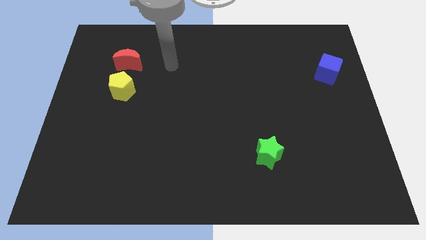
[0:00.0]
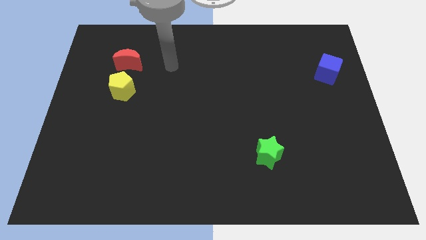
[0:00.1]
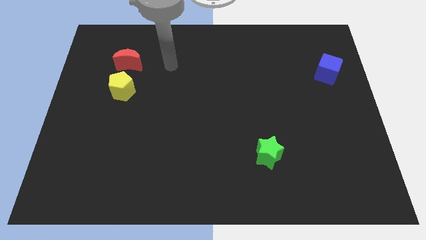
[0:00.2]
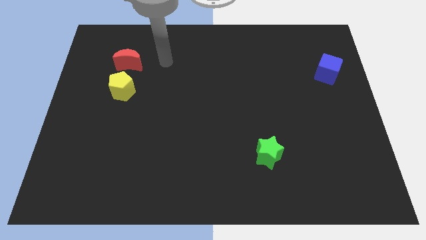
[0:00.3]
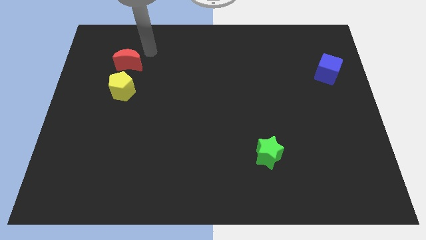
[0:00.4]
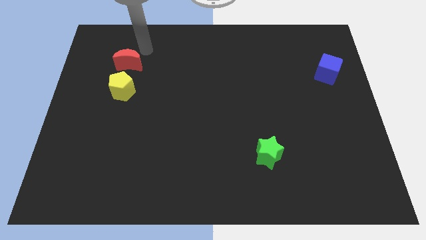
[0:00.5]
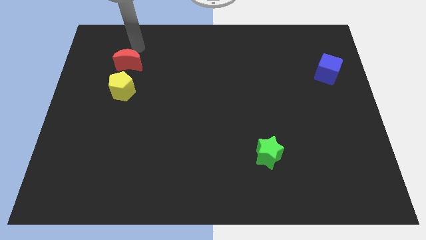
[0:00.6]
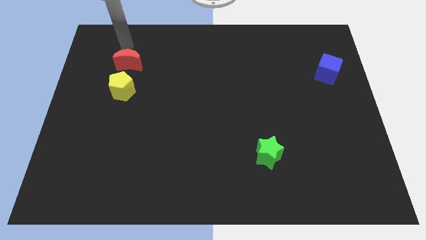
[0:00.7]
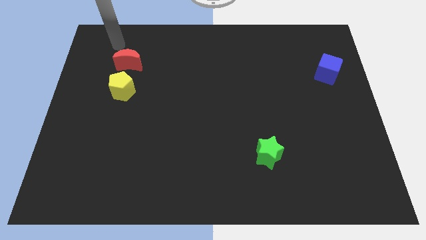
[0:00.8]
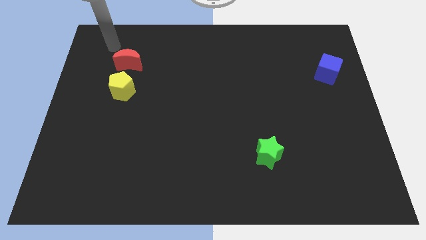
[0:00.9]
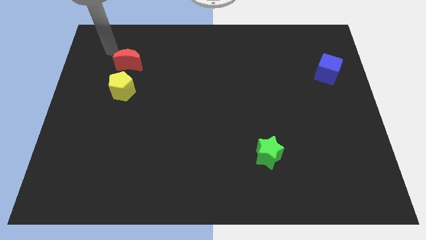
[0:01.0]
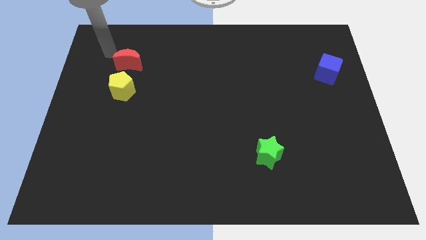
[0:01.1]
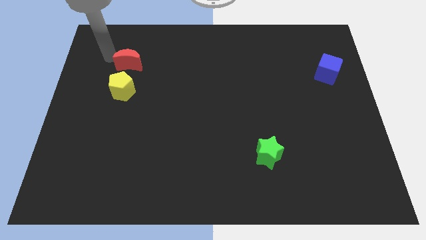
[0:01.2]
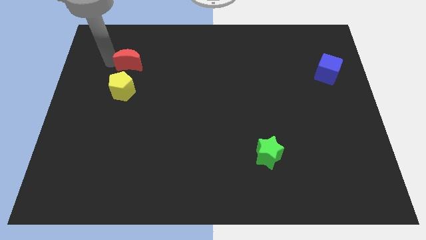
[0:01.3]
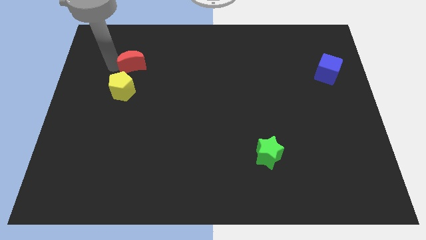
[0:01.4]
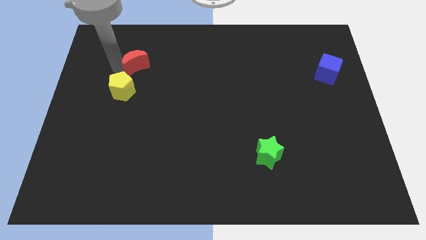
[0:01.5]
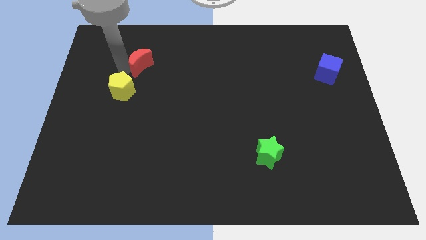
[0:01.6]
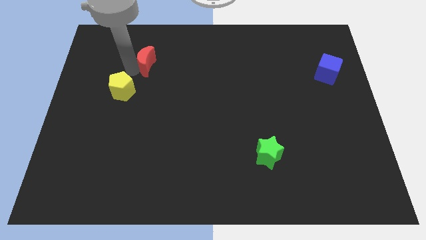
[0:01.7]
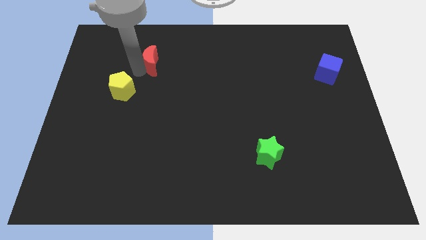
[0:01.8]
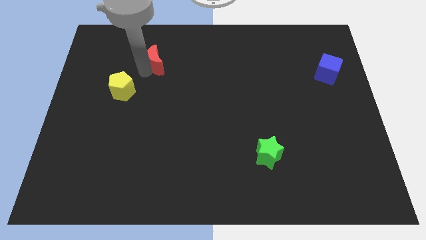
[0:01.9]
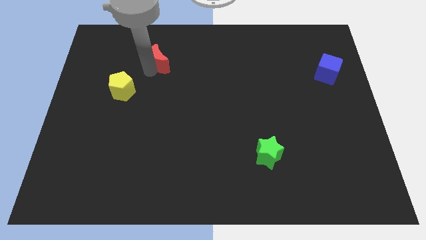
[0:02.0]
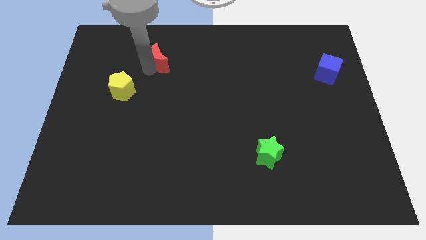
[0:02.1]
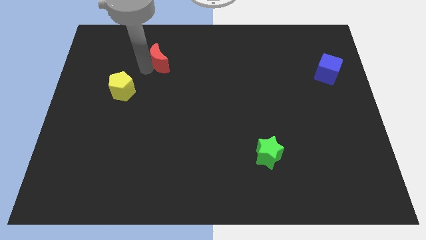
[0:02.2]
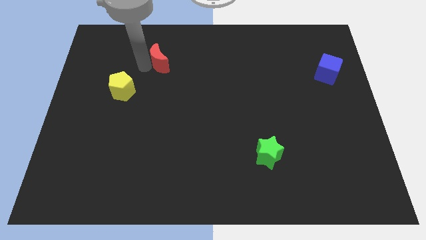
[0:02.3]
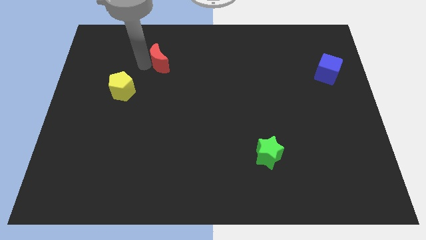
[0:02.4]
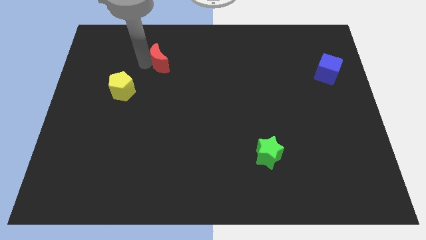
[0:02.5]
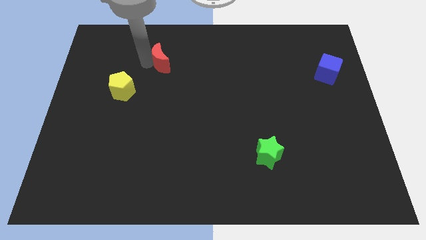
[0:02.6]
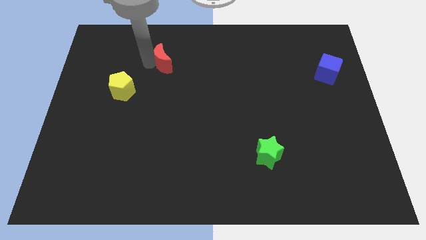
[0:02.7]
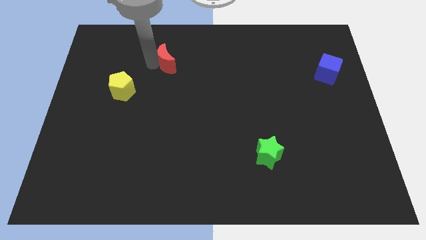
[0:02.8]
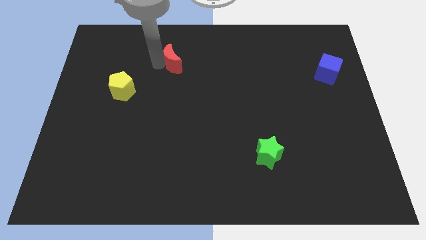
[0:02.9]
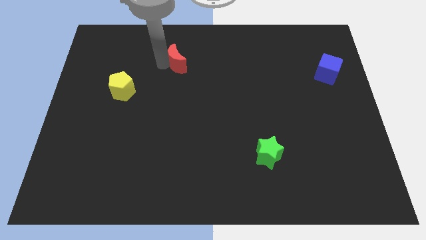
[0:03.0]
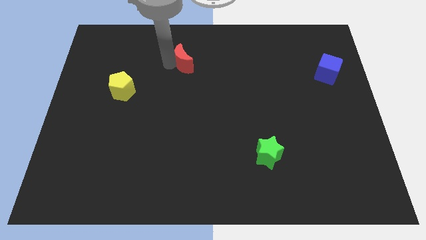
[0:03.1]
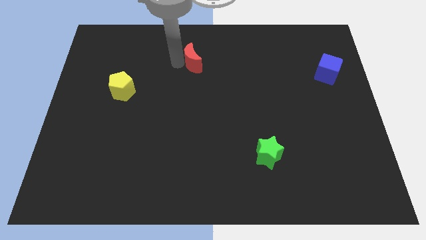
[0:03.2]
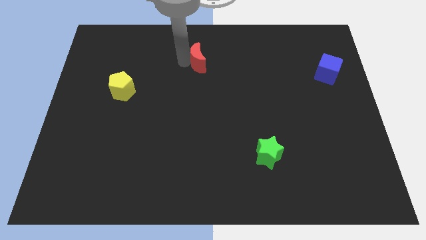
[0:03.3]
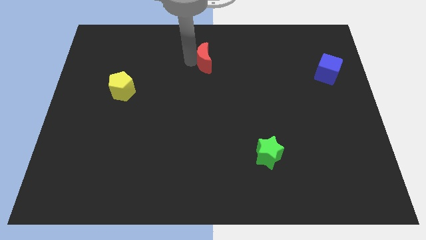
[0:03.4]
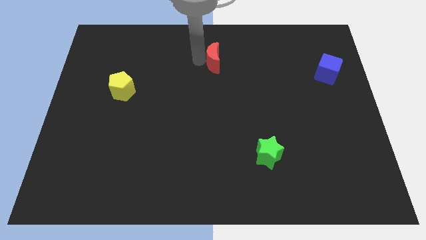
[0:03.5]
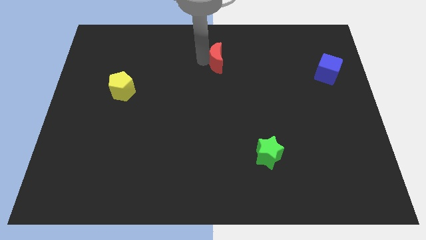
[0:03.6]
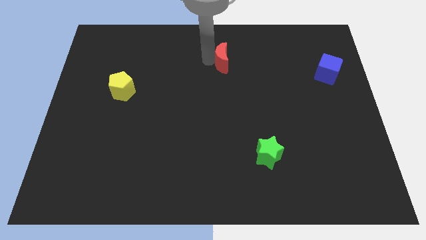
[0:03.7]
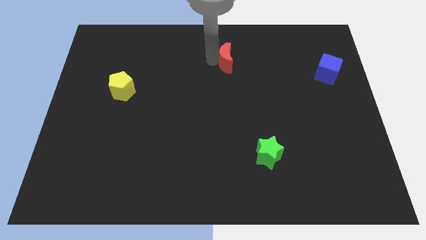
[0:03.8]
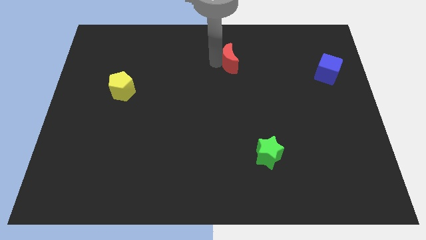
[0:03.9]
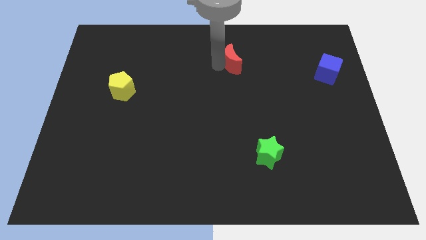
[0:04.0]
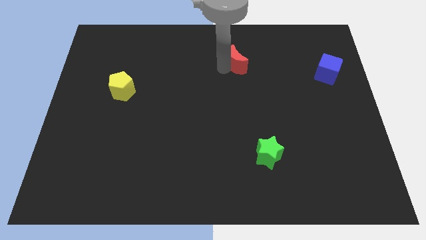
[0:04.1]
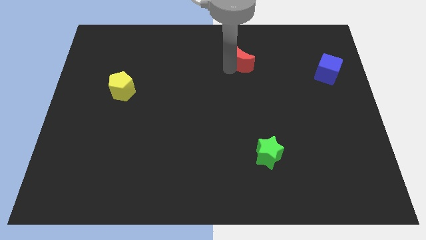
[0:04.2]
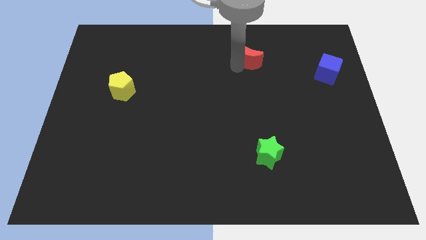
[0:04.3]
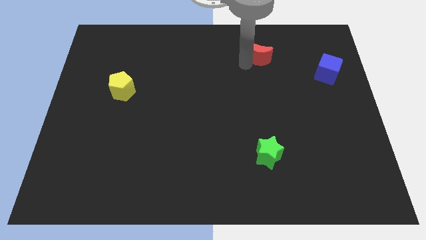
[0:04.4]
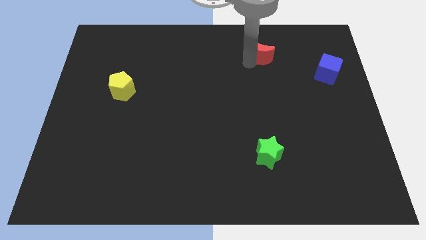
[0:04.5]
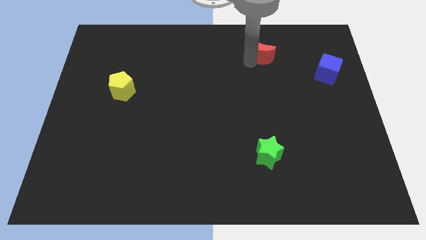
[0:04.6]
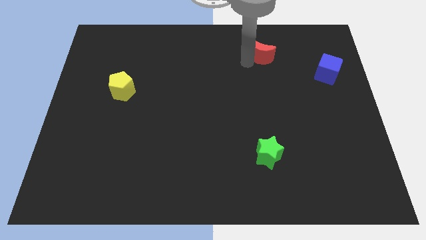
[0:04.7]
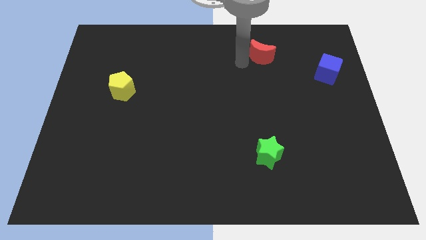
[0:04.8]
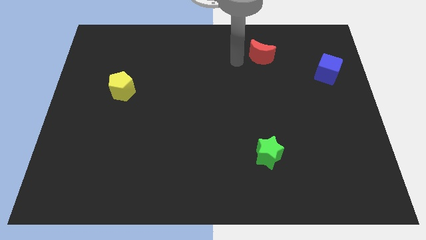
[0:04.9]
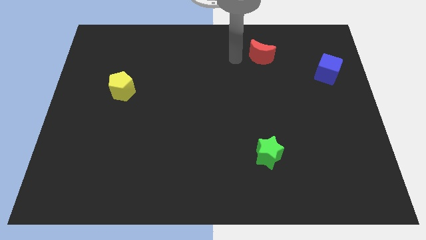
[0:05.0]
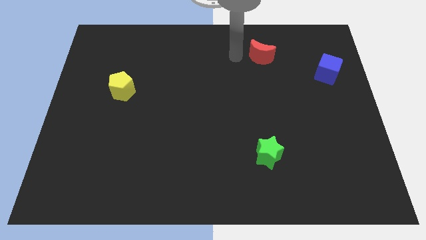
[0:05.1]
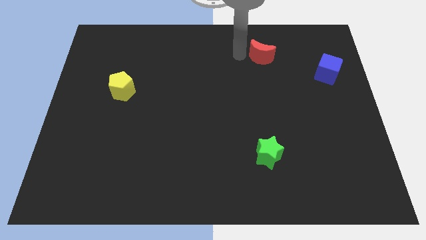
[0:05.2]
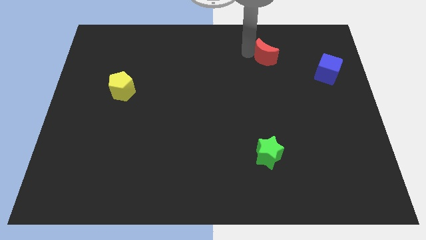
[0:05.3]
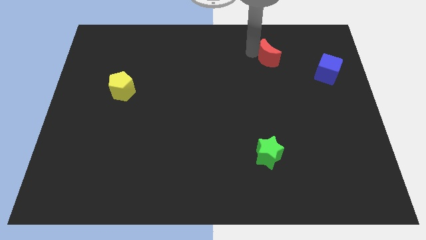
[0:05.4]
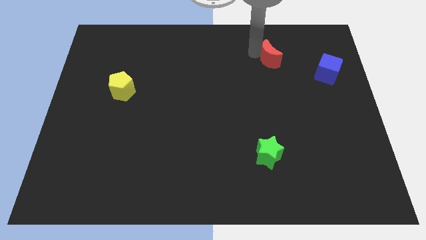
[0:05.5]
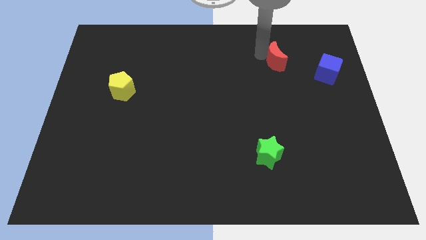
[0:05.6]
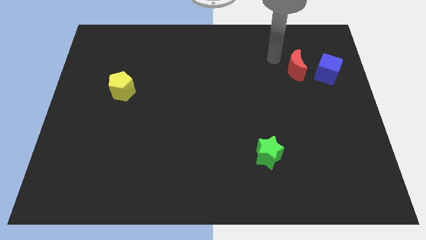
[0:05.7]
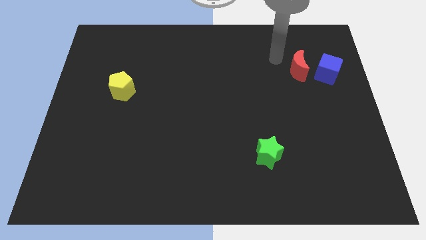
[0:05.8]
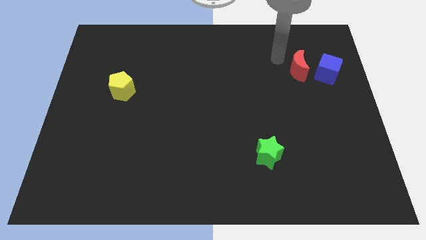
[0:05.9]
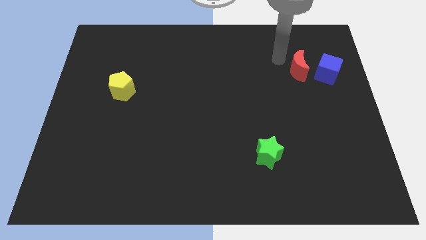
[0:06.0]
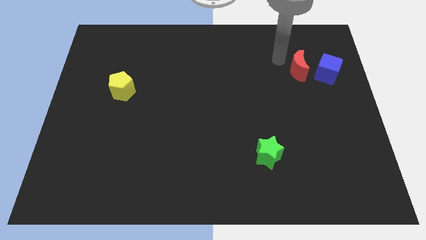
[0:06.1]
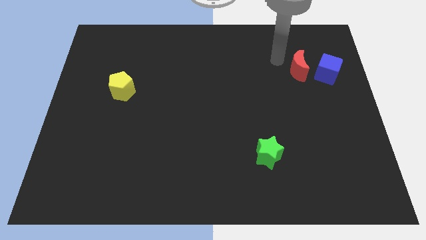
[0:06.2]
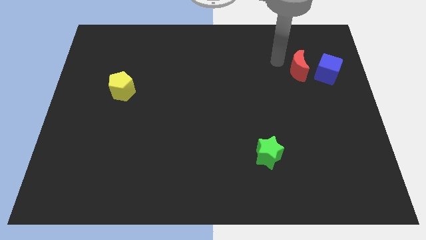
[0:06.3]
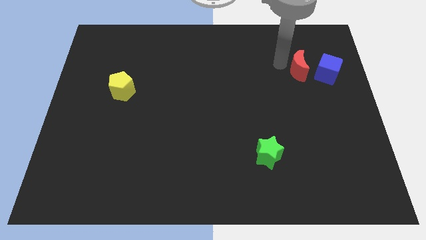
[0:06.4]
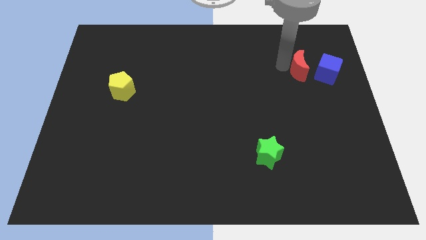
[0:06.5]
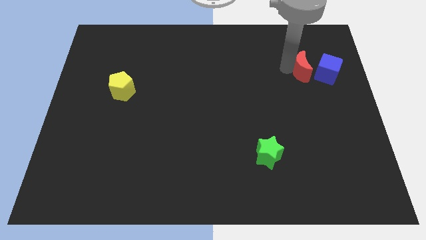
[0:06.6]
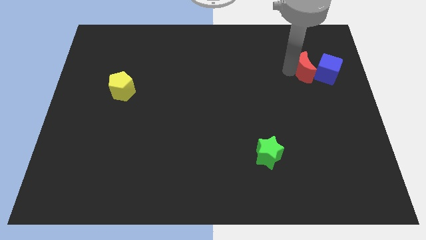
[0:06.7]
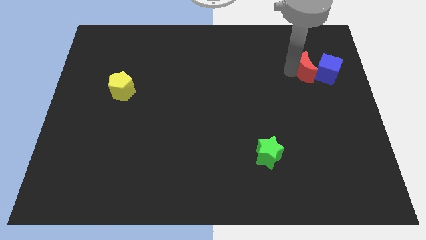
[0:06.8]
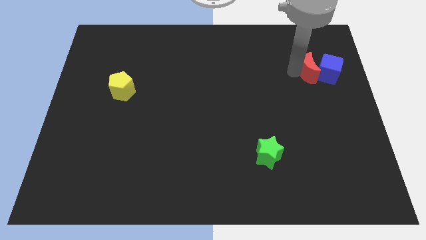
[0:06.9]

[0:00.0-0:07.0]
put the red moon close to the cube

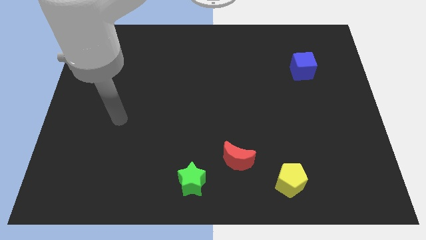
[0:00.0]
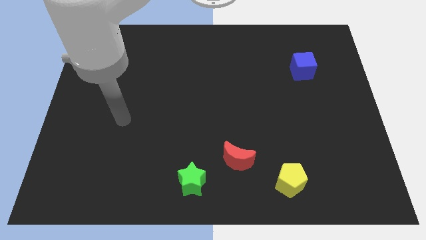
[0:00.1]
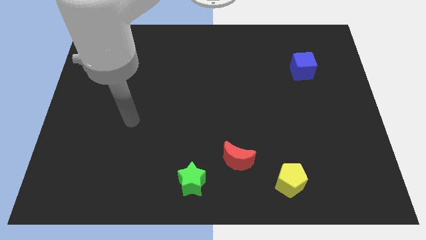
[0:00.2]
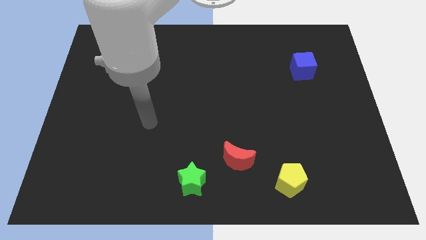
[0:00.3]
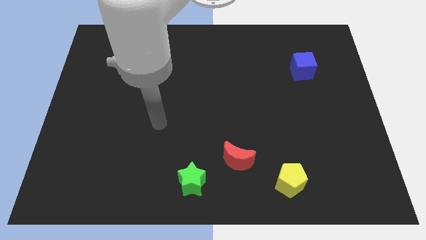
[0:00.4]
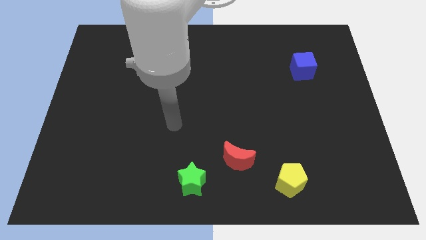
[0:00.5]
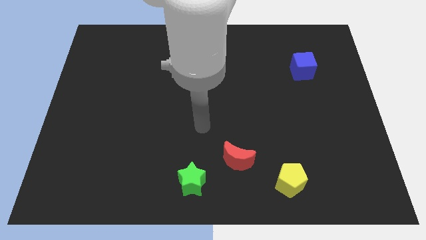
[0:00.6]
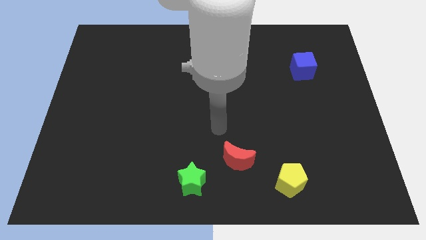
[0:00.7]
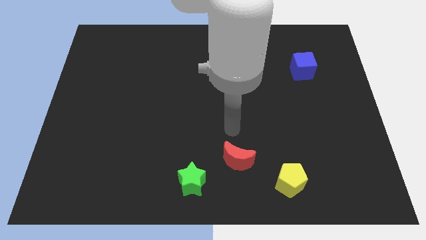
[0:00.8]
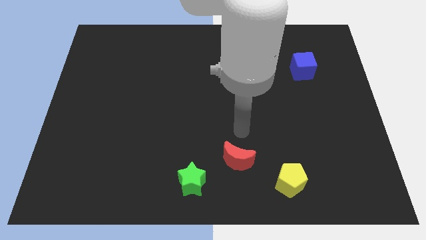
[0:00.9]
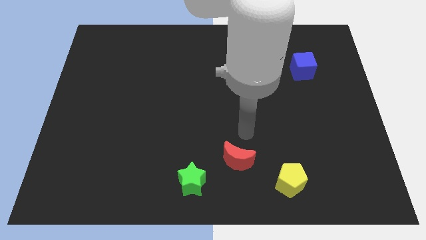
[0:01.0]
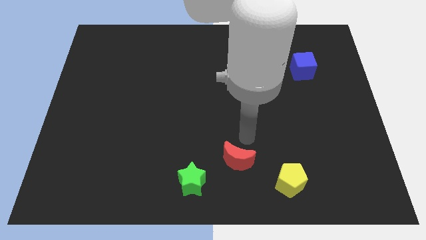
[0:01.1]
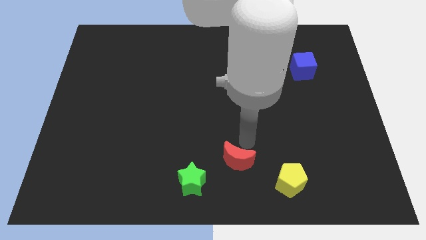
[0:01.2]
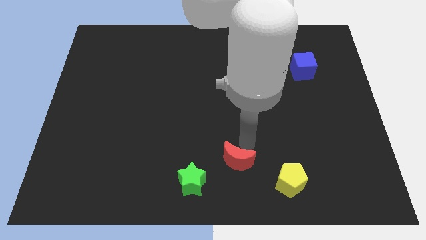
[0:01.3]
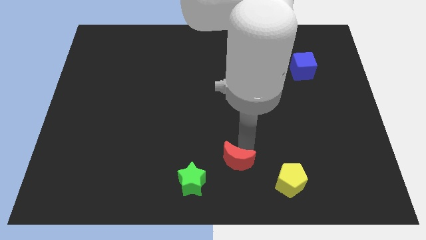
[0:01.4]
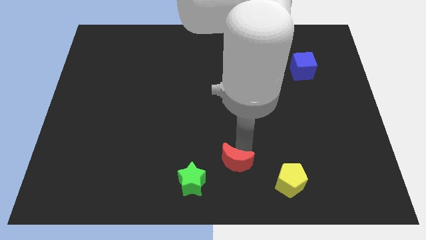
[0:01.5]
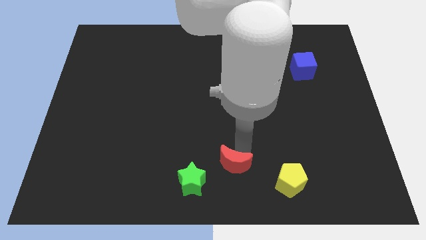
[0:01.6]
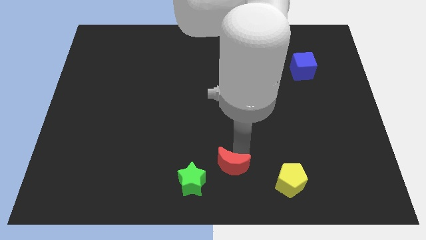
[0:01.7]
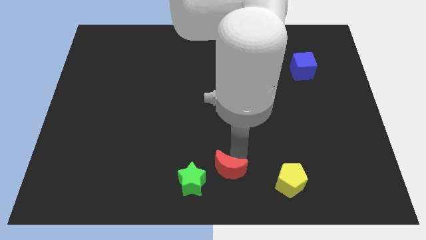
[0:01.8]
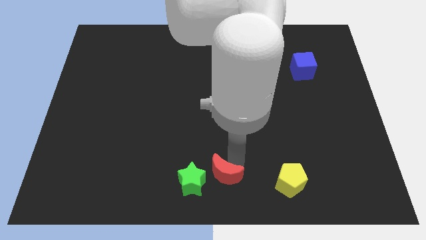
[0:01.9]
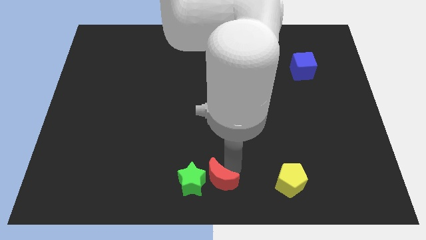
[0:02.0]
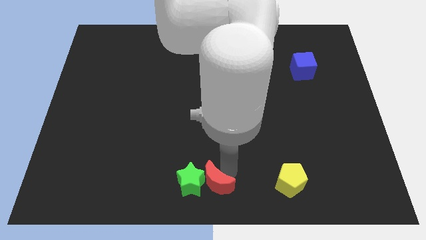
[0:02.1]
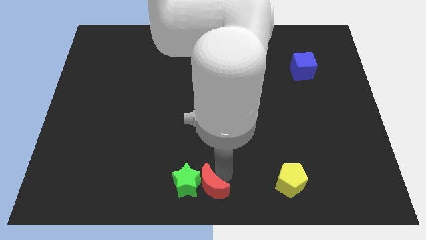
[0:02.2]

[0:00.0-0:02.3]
push the red moon close to the green block
